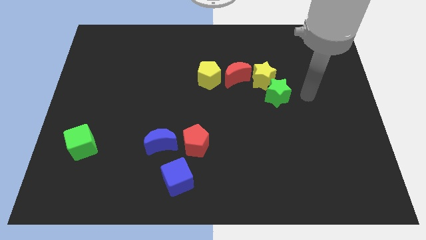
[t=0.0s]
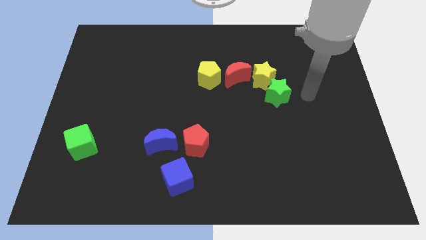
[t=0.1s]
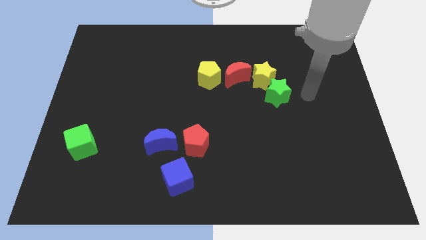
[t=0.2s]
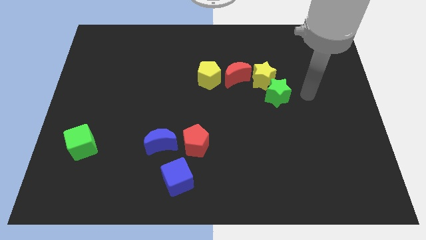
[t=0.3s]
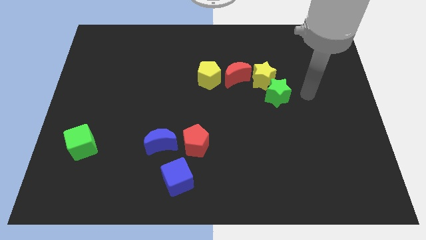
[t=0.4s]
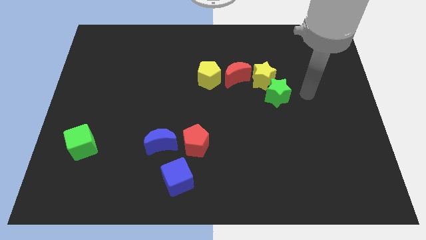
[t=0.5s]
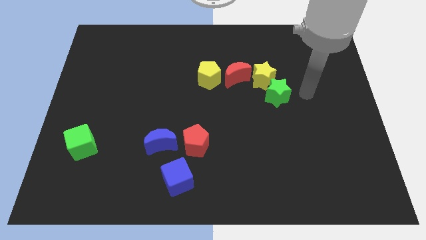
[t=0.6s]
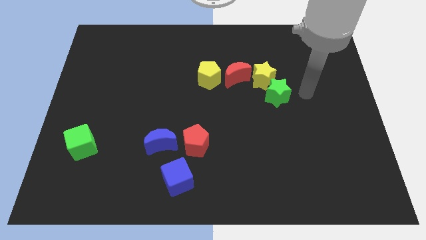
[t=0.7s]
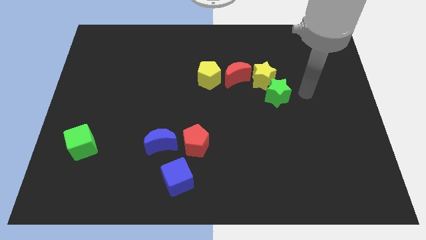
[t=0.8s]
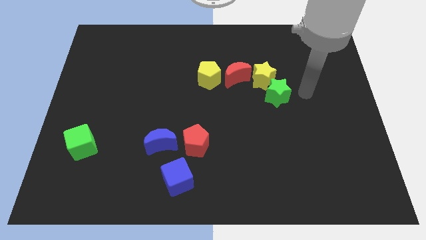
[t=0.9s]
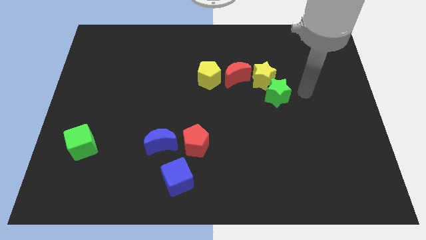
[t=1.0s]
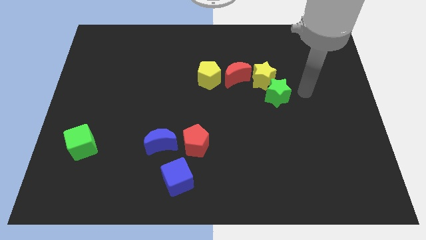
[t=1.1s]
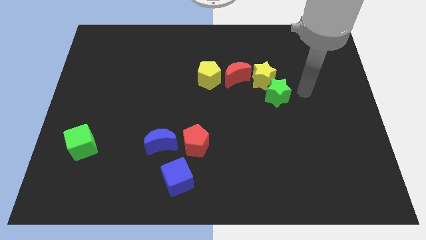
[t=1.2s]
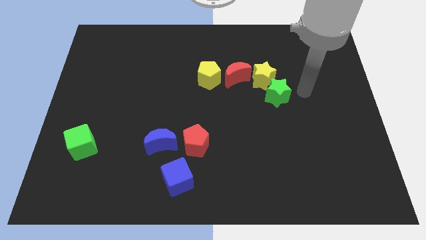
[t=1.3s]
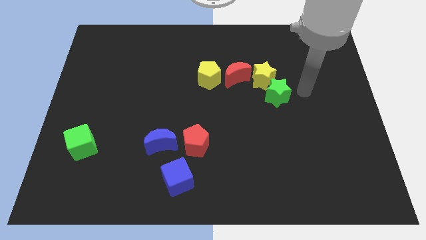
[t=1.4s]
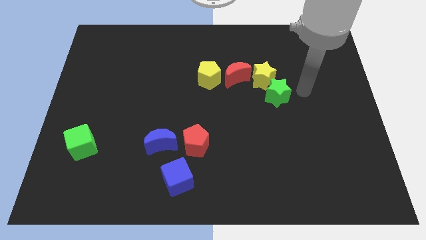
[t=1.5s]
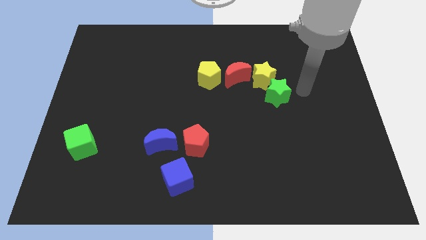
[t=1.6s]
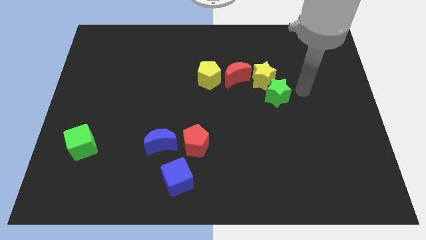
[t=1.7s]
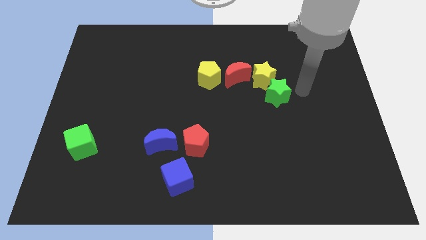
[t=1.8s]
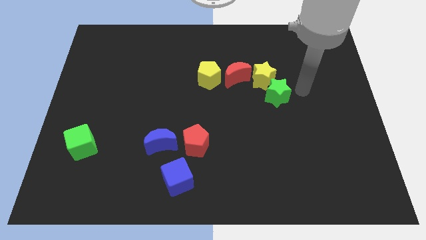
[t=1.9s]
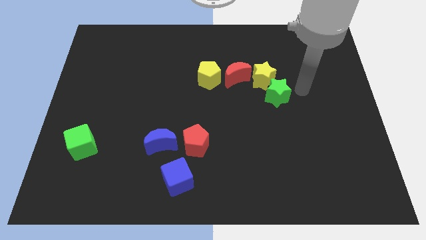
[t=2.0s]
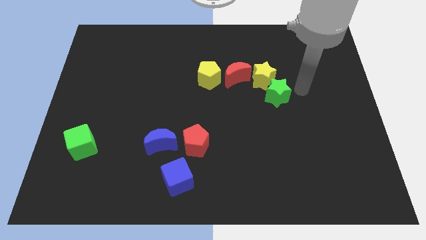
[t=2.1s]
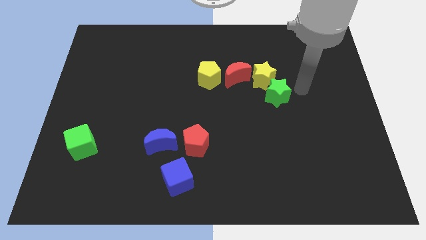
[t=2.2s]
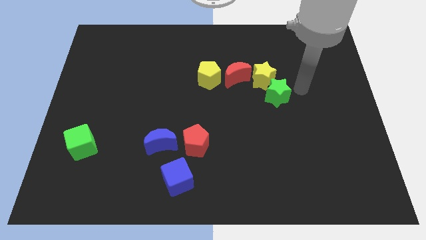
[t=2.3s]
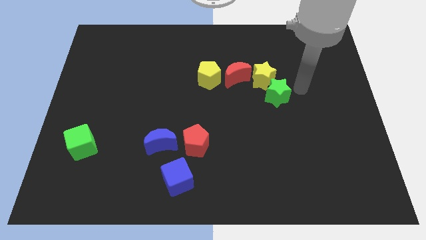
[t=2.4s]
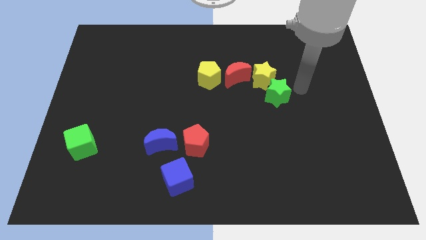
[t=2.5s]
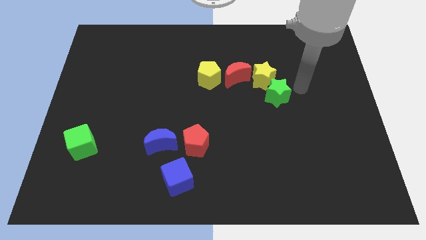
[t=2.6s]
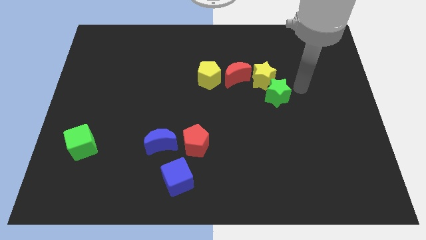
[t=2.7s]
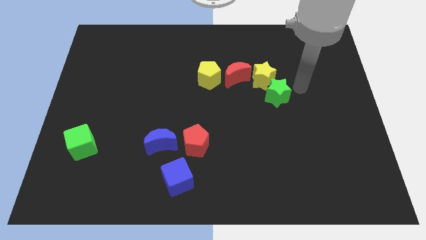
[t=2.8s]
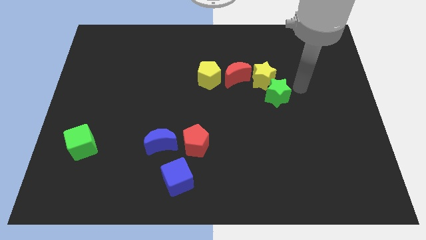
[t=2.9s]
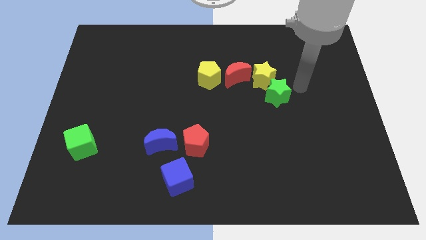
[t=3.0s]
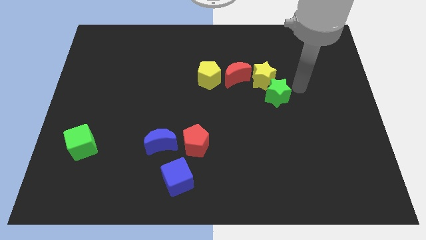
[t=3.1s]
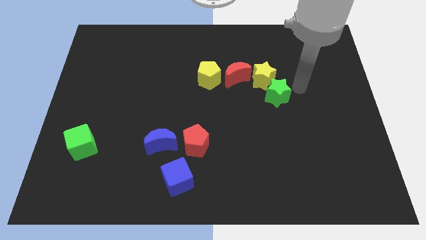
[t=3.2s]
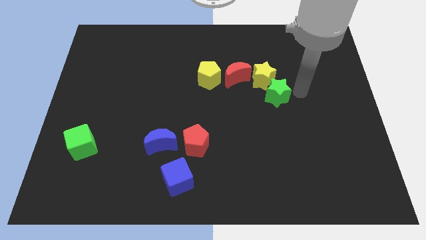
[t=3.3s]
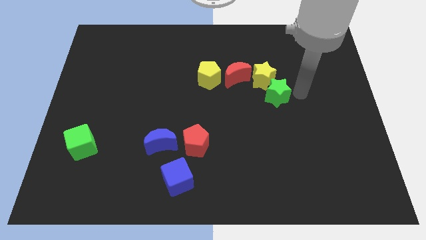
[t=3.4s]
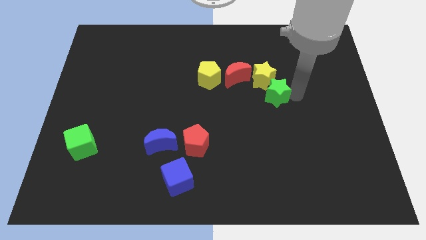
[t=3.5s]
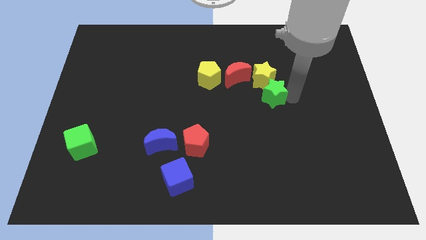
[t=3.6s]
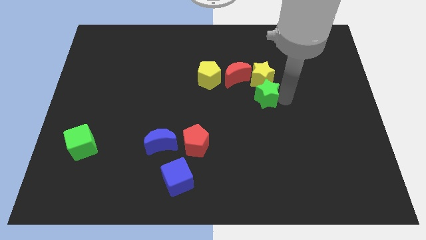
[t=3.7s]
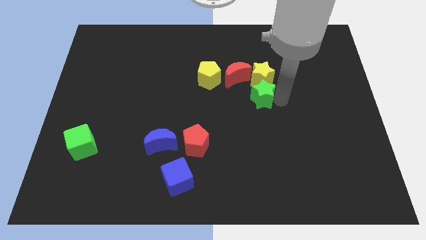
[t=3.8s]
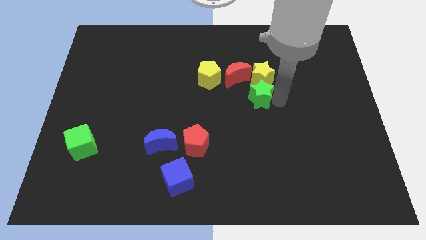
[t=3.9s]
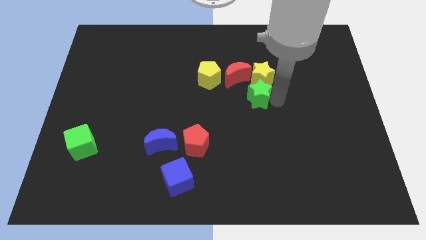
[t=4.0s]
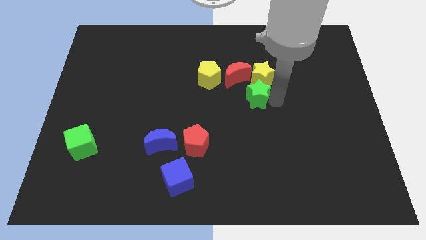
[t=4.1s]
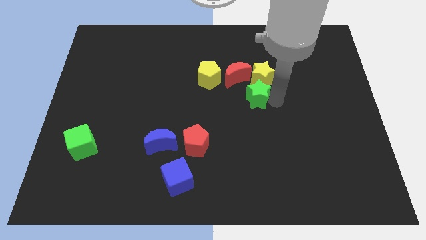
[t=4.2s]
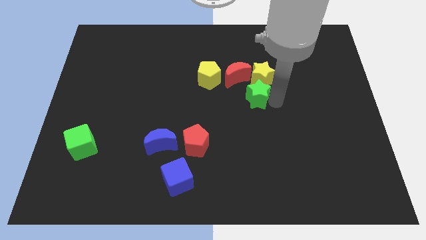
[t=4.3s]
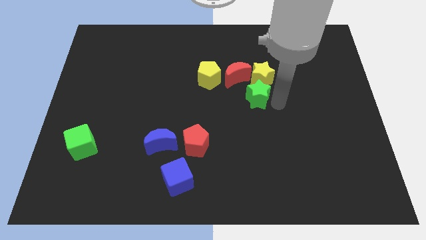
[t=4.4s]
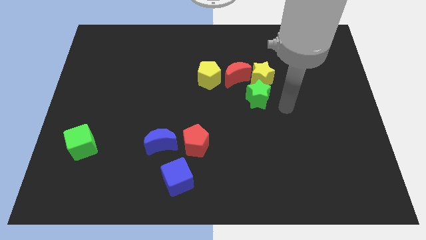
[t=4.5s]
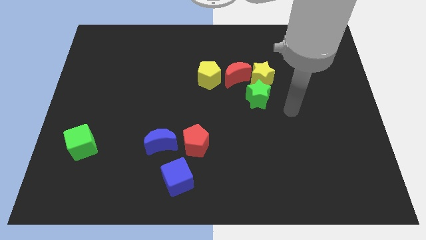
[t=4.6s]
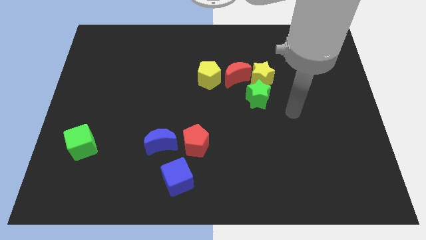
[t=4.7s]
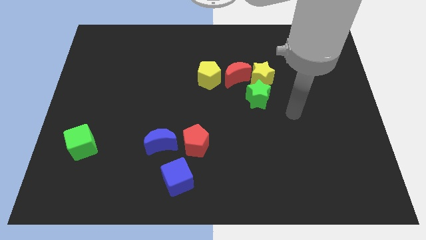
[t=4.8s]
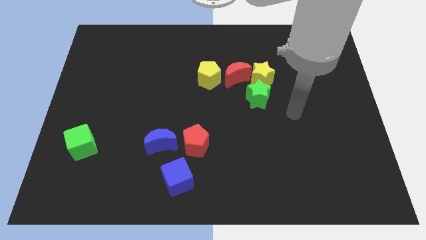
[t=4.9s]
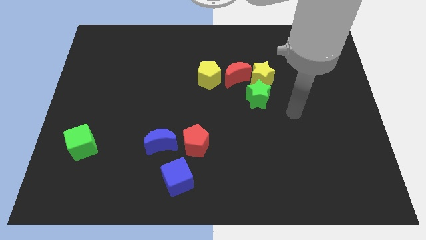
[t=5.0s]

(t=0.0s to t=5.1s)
move the green star slightly towards left

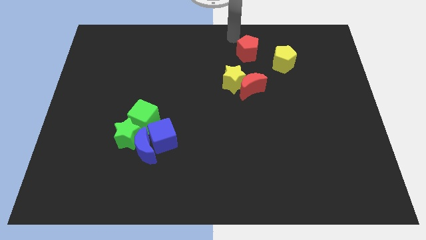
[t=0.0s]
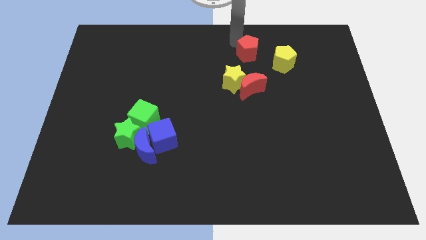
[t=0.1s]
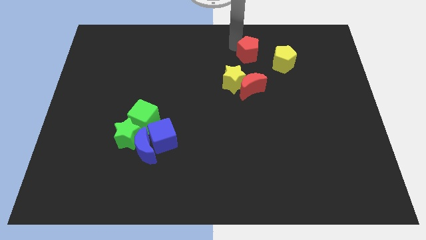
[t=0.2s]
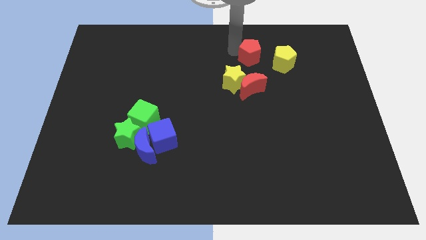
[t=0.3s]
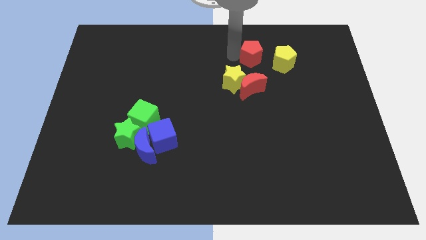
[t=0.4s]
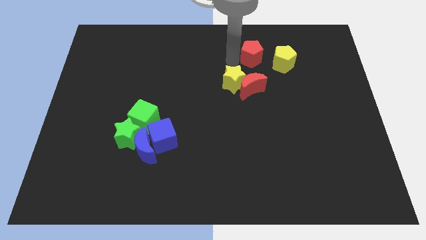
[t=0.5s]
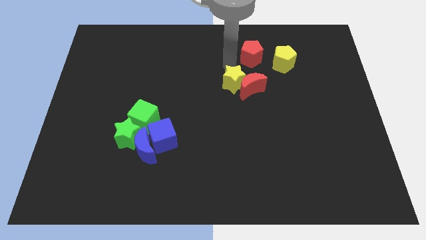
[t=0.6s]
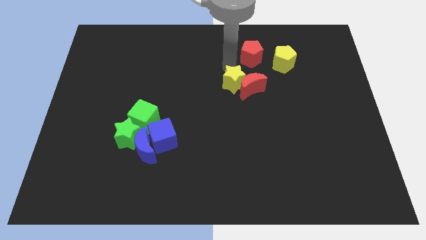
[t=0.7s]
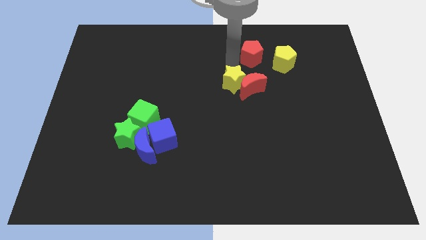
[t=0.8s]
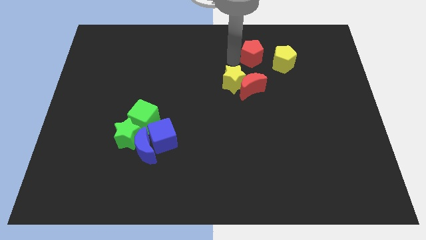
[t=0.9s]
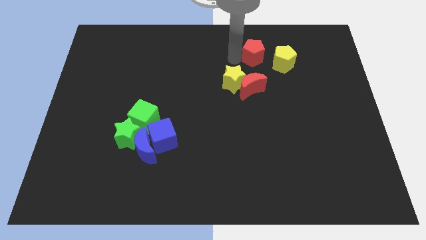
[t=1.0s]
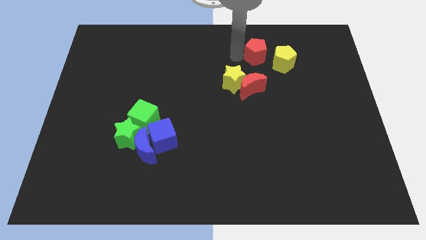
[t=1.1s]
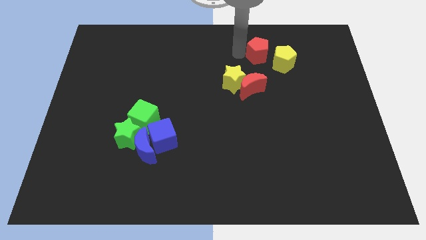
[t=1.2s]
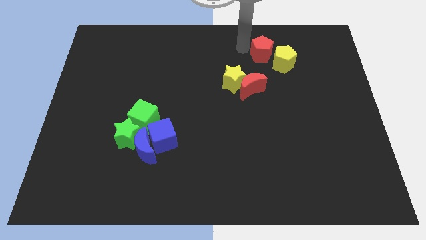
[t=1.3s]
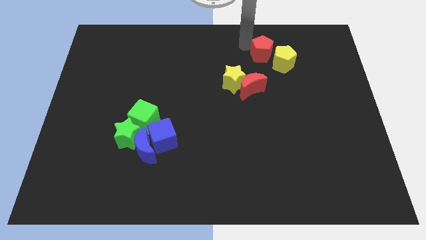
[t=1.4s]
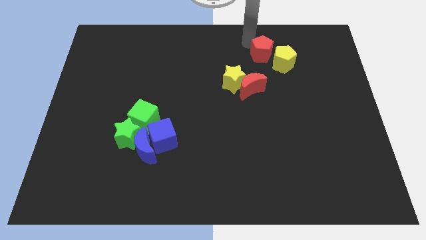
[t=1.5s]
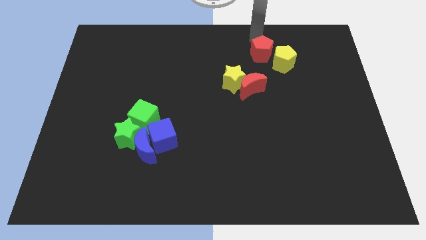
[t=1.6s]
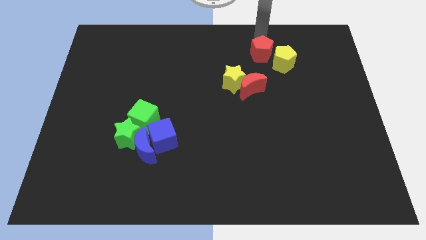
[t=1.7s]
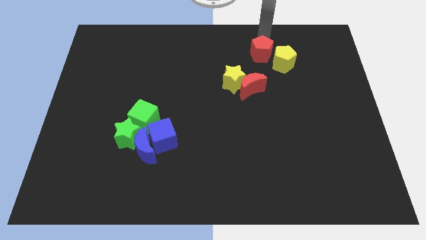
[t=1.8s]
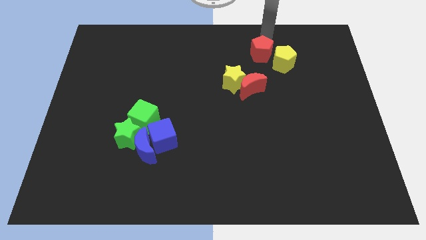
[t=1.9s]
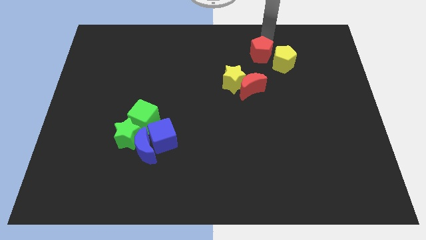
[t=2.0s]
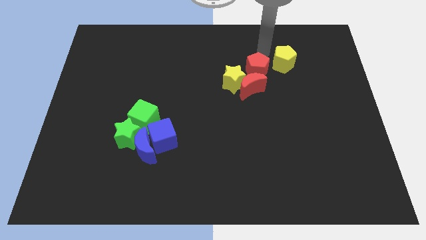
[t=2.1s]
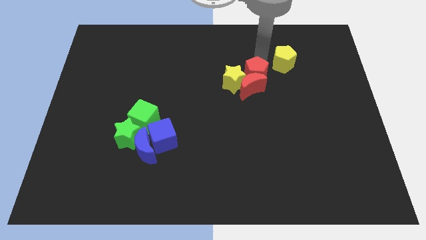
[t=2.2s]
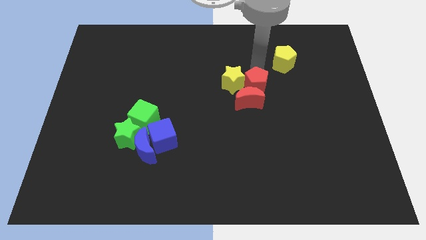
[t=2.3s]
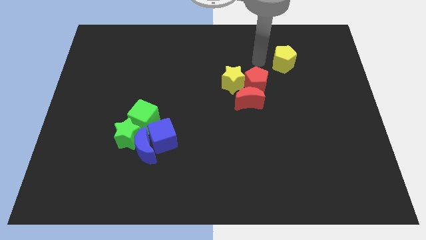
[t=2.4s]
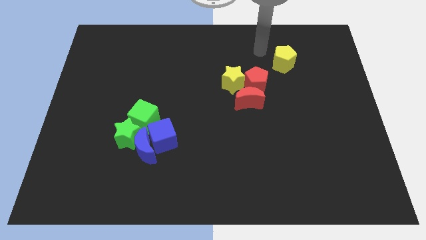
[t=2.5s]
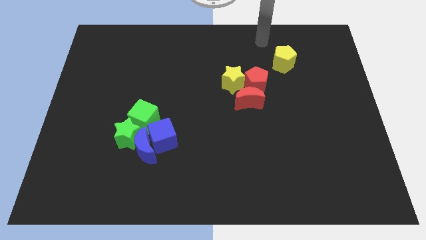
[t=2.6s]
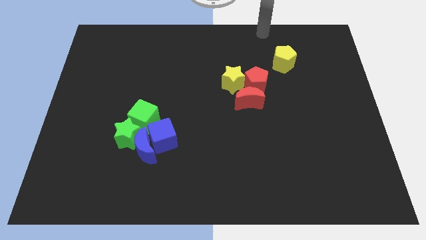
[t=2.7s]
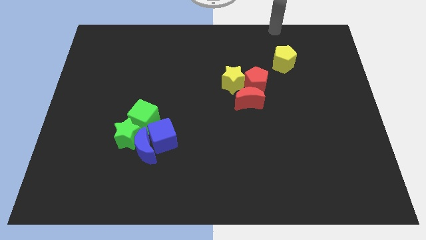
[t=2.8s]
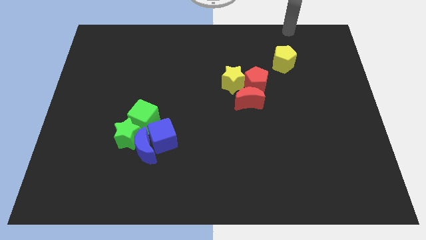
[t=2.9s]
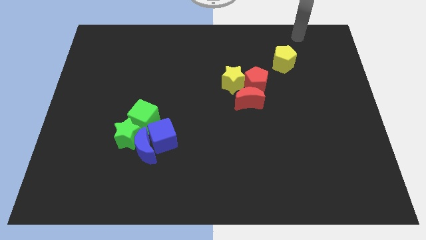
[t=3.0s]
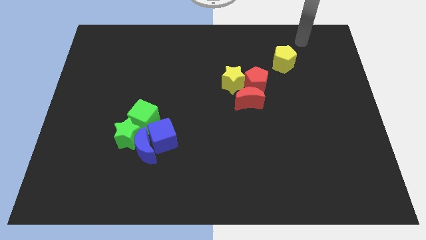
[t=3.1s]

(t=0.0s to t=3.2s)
push red pentagon into red crescent

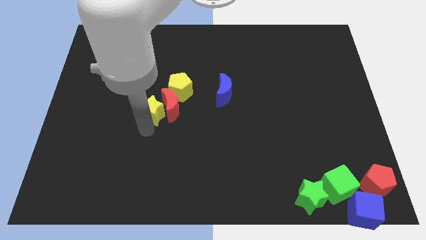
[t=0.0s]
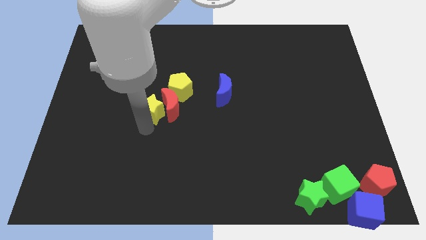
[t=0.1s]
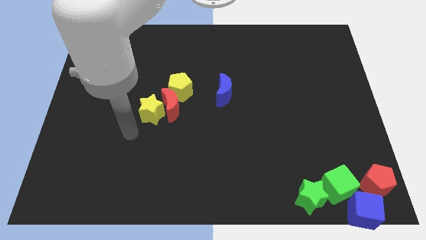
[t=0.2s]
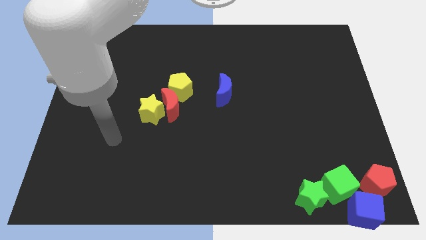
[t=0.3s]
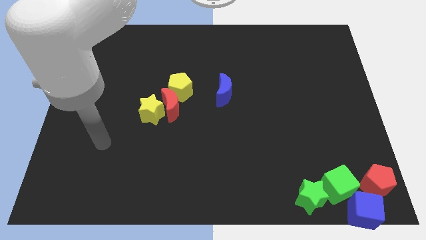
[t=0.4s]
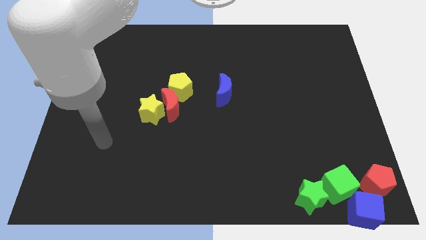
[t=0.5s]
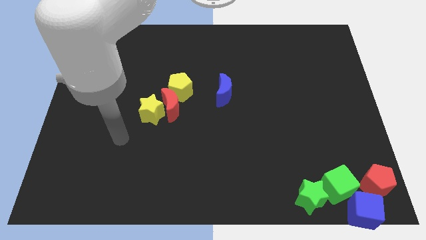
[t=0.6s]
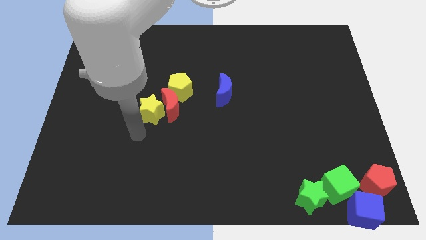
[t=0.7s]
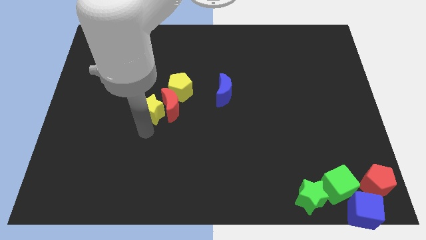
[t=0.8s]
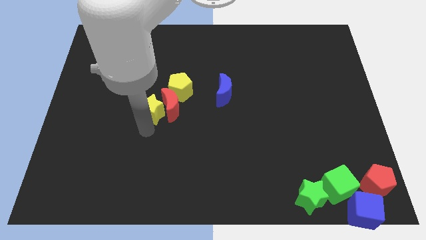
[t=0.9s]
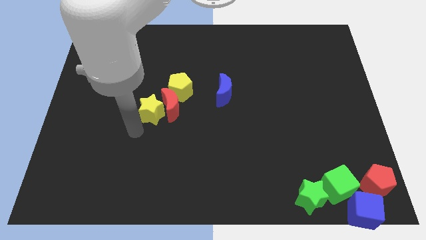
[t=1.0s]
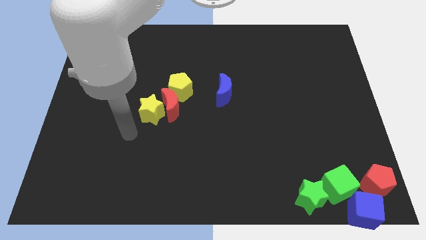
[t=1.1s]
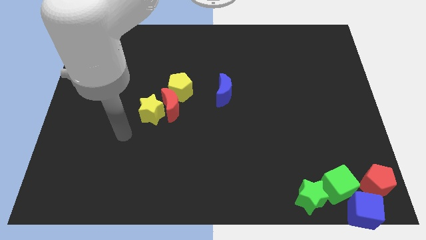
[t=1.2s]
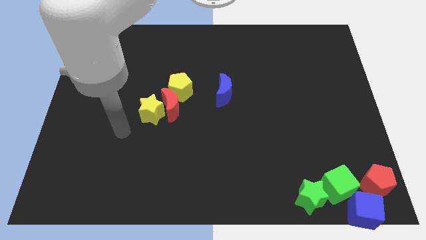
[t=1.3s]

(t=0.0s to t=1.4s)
move your arm away from yellow star
